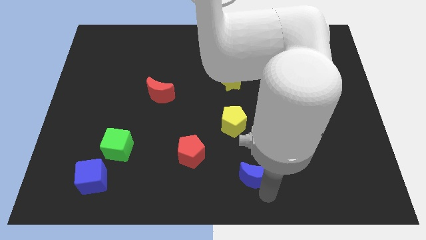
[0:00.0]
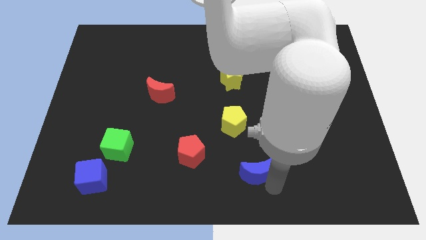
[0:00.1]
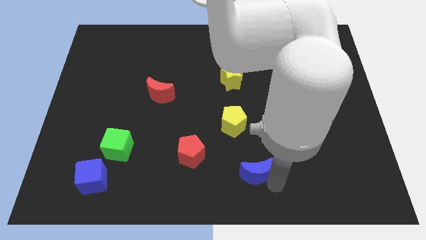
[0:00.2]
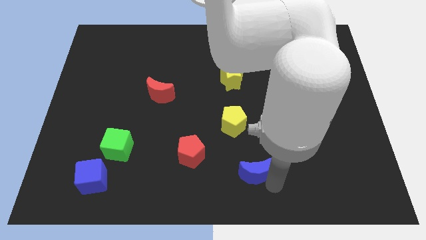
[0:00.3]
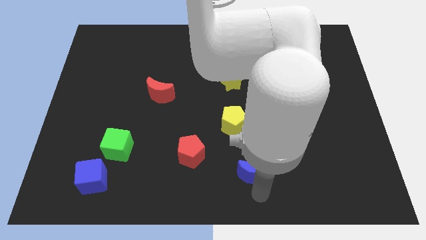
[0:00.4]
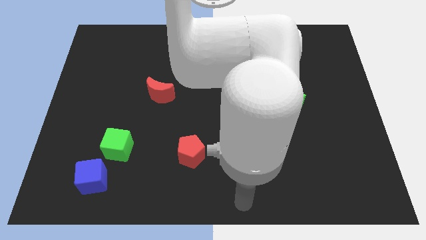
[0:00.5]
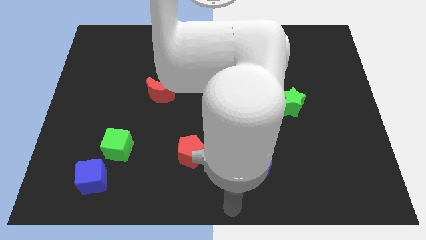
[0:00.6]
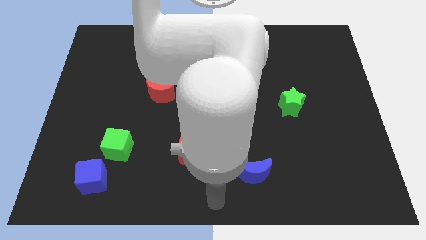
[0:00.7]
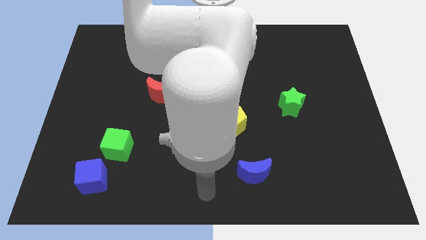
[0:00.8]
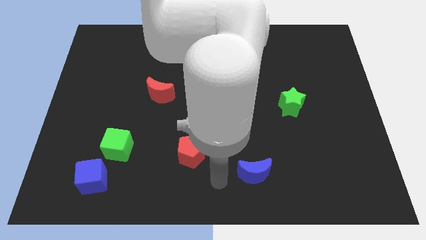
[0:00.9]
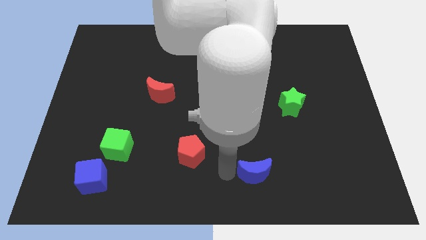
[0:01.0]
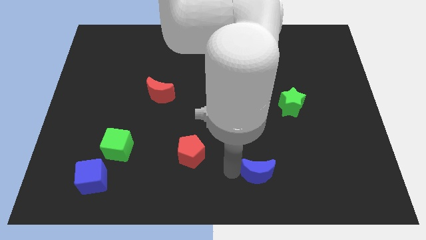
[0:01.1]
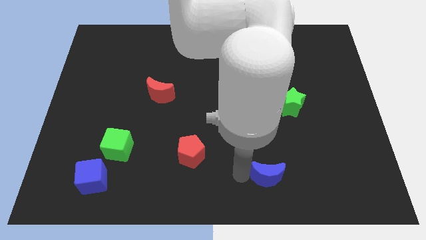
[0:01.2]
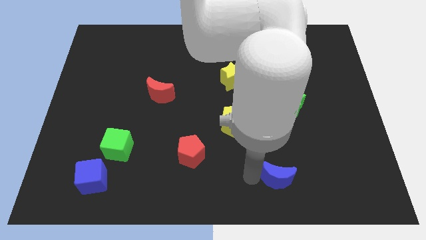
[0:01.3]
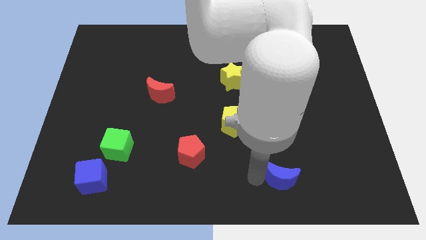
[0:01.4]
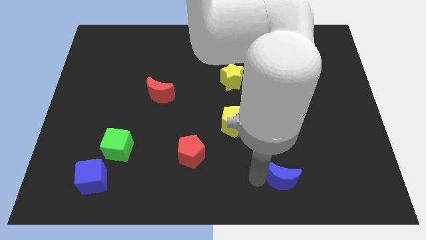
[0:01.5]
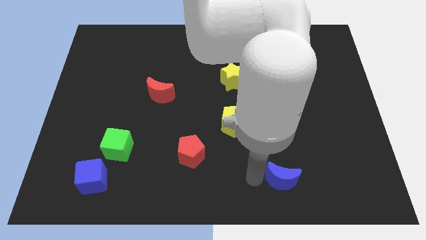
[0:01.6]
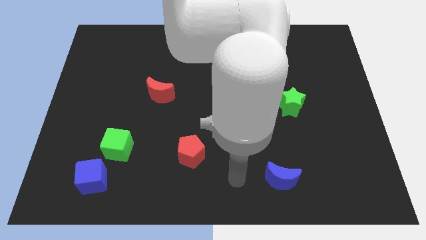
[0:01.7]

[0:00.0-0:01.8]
push the blue crescent to the bottom of the green star

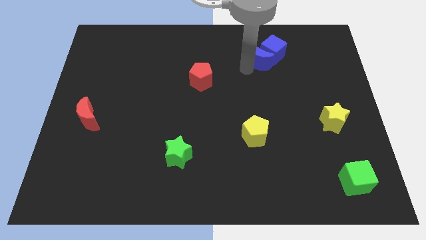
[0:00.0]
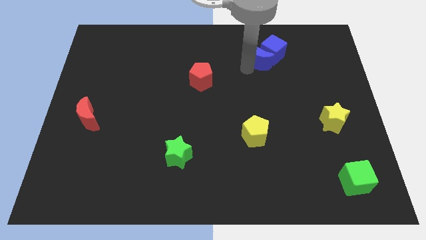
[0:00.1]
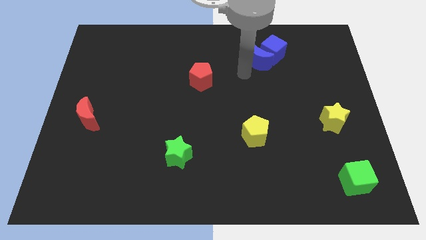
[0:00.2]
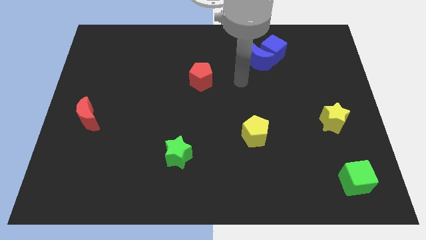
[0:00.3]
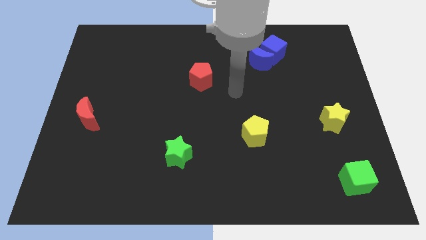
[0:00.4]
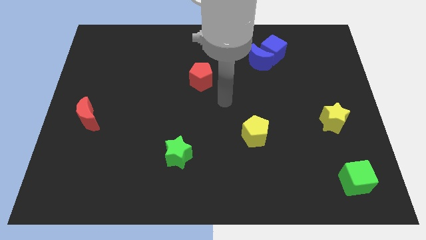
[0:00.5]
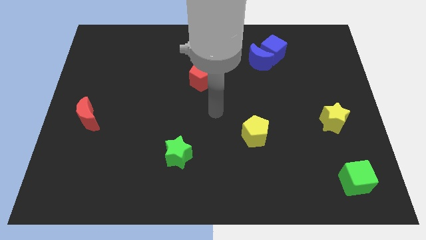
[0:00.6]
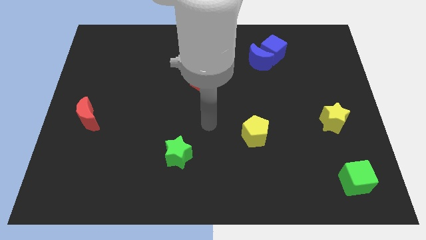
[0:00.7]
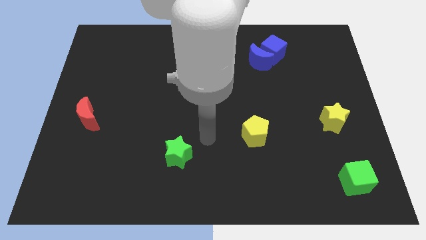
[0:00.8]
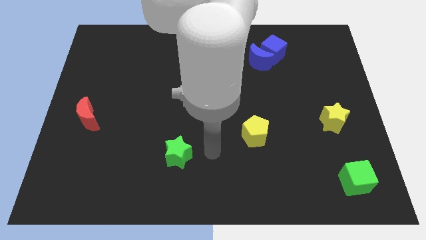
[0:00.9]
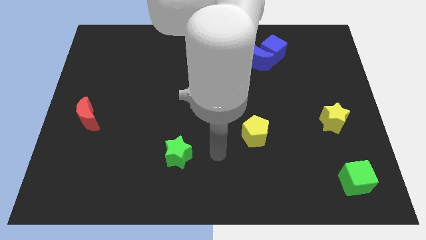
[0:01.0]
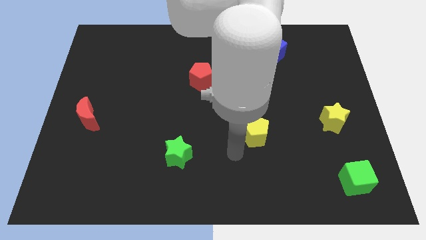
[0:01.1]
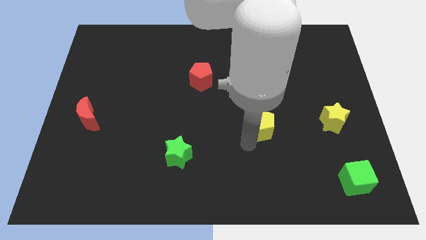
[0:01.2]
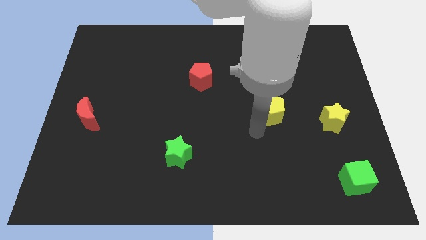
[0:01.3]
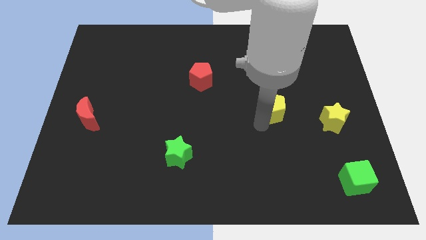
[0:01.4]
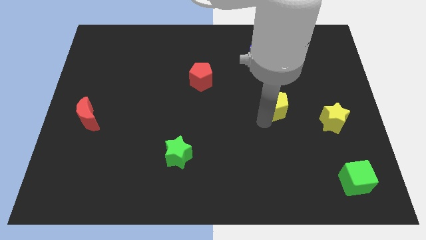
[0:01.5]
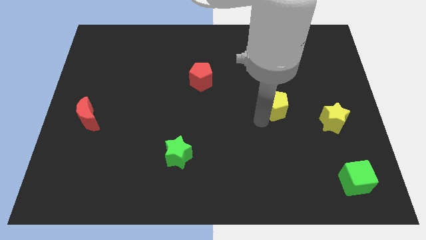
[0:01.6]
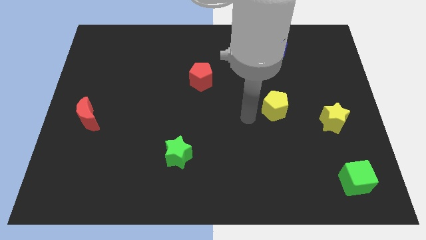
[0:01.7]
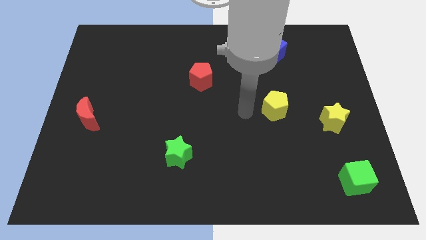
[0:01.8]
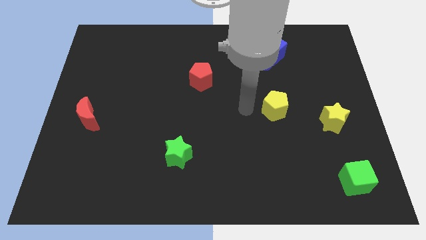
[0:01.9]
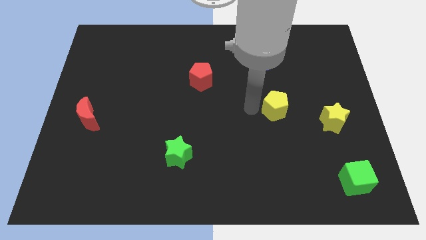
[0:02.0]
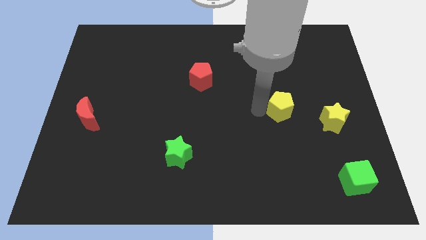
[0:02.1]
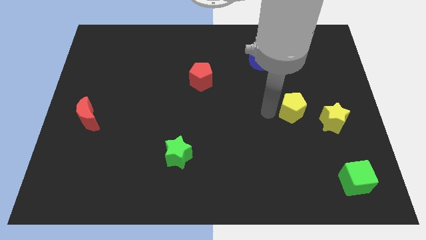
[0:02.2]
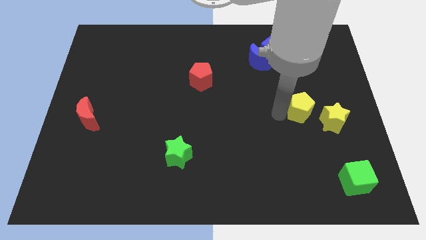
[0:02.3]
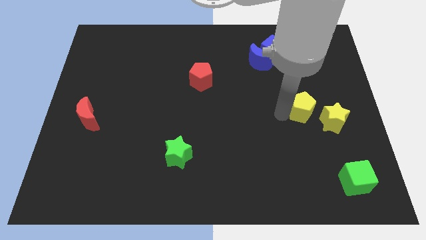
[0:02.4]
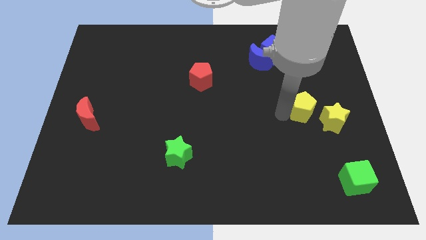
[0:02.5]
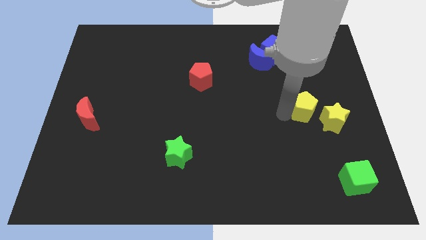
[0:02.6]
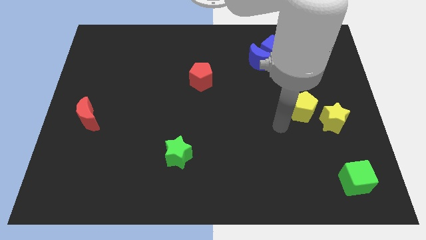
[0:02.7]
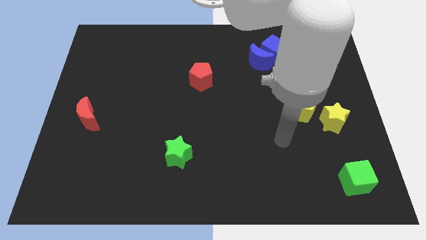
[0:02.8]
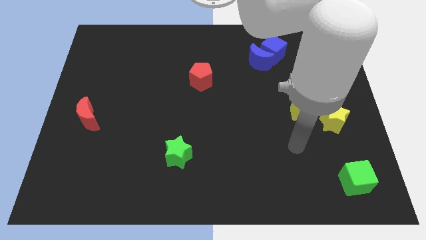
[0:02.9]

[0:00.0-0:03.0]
slide the yellow pentagon close to the yellow star

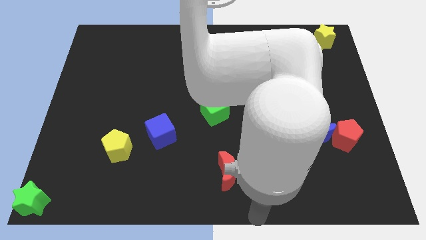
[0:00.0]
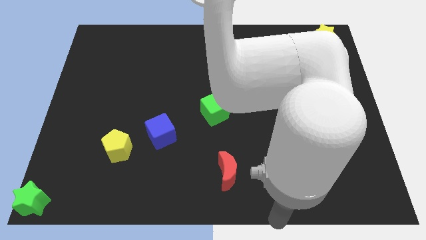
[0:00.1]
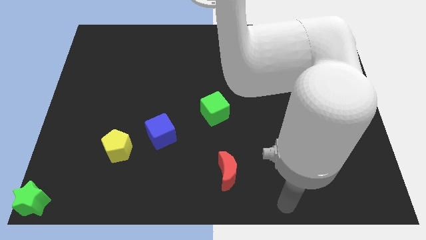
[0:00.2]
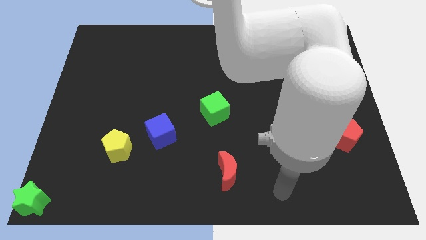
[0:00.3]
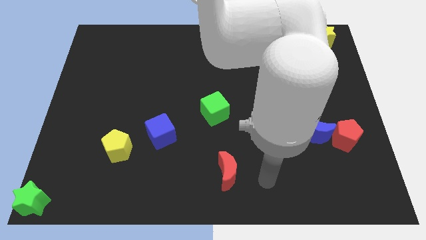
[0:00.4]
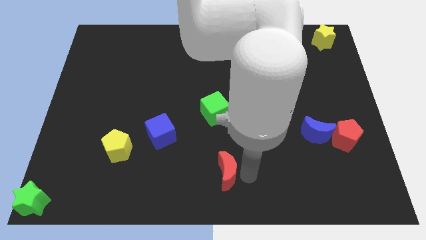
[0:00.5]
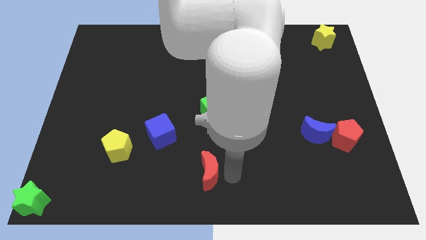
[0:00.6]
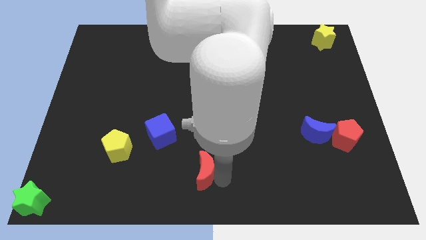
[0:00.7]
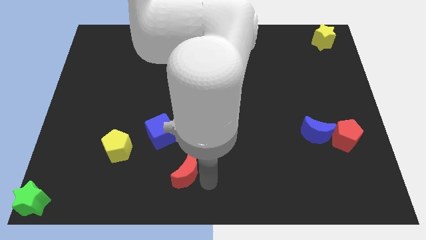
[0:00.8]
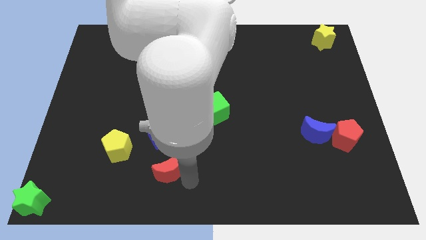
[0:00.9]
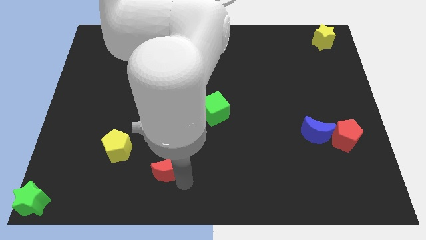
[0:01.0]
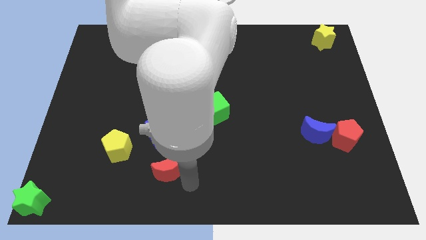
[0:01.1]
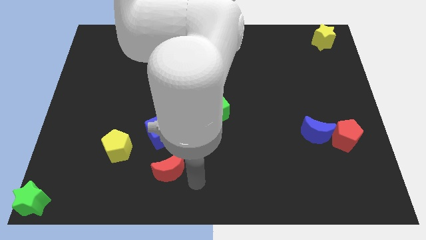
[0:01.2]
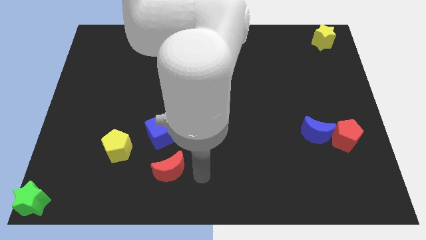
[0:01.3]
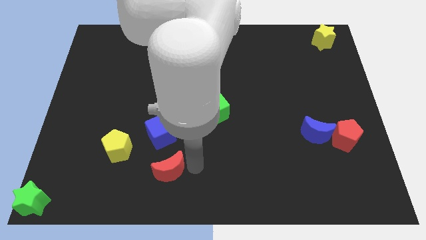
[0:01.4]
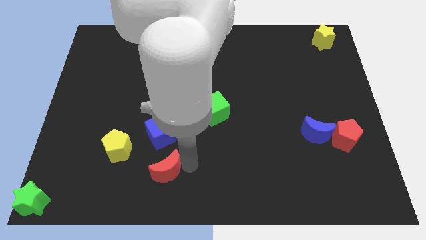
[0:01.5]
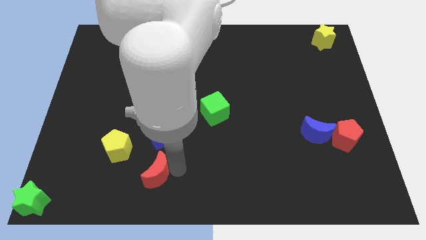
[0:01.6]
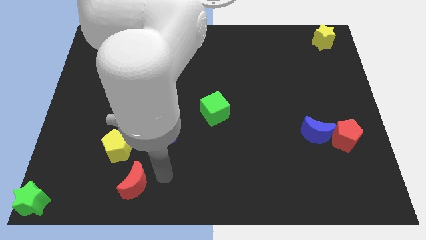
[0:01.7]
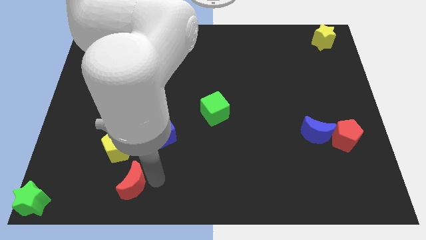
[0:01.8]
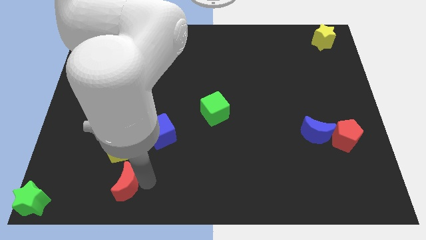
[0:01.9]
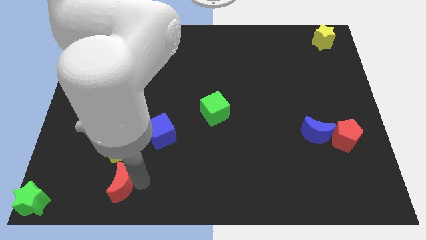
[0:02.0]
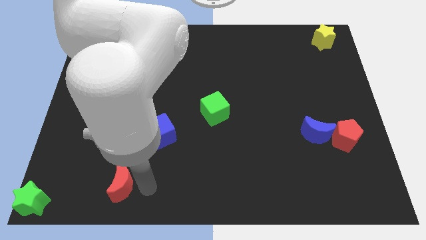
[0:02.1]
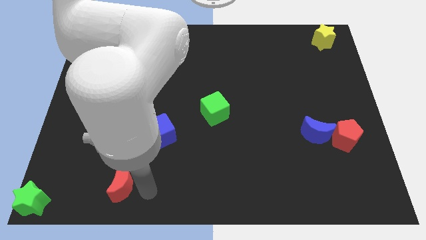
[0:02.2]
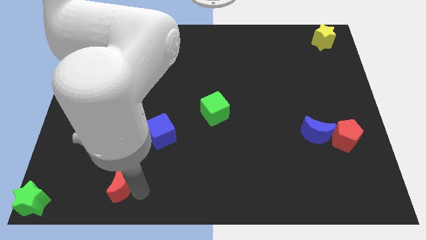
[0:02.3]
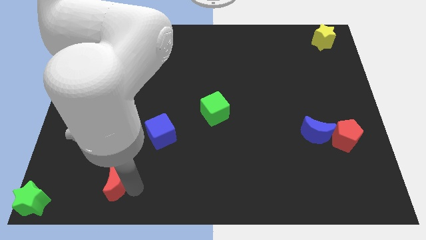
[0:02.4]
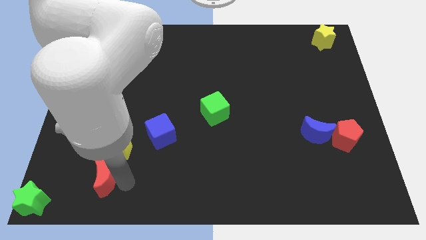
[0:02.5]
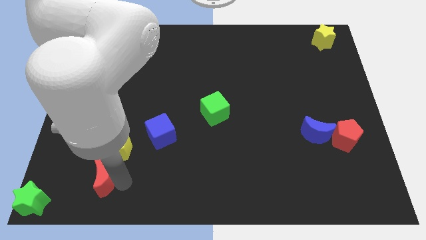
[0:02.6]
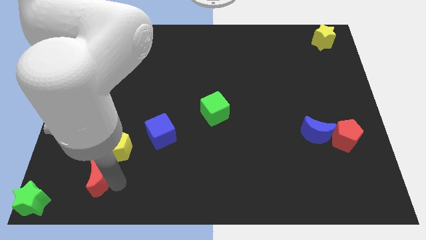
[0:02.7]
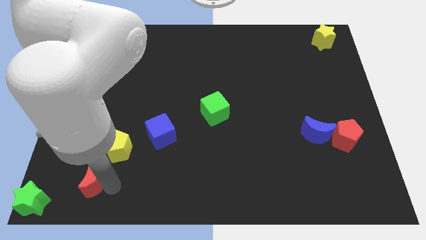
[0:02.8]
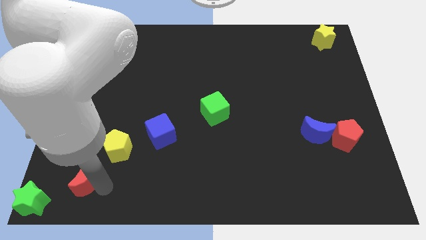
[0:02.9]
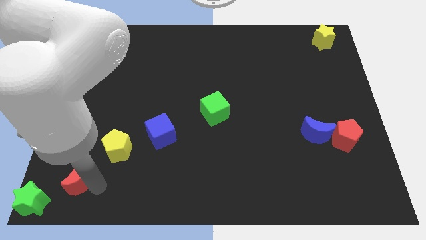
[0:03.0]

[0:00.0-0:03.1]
slide red crescent to the top right of green star

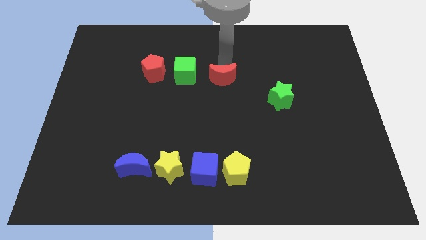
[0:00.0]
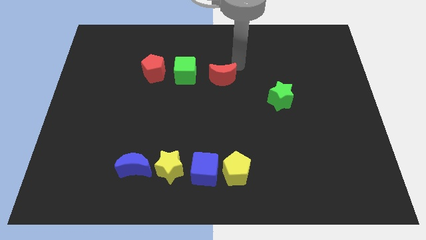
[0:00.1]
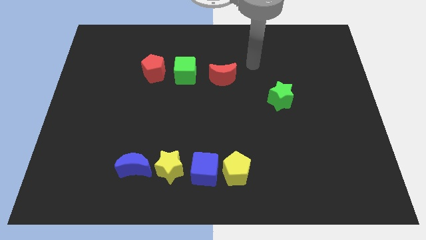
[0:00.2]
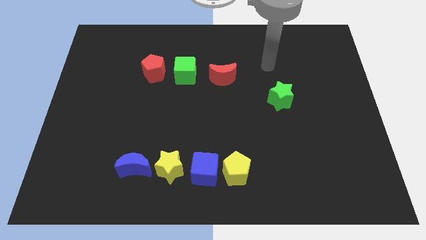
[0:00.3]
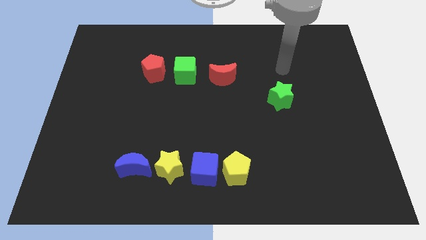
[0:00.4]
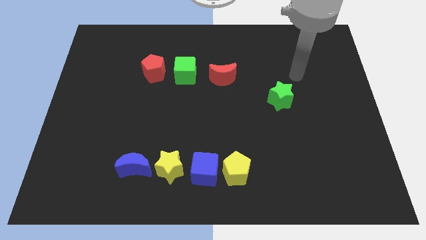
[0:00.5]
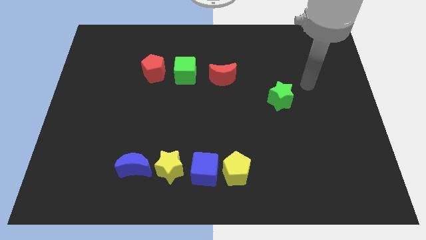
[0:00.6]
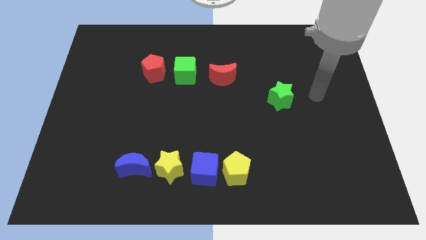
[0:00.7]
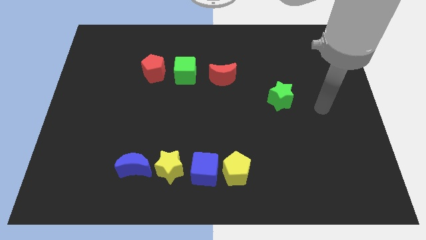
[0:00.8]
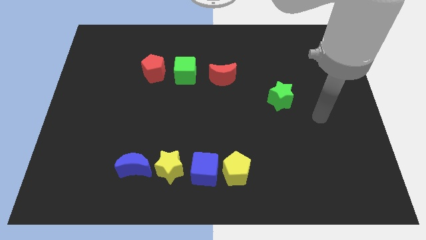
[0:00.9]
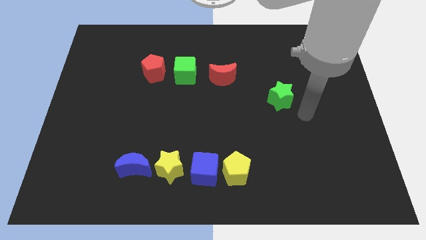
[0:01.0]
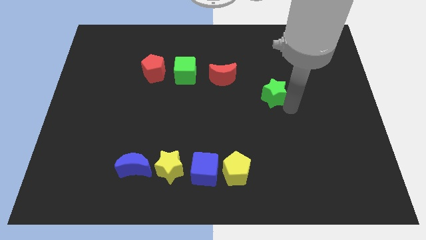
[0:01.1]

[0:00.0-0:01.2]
move the arm away from the red crescent
